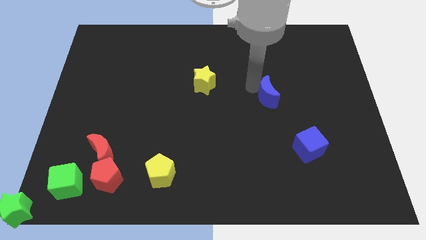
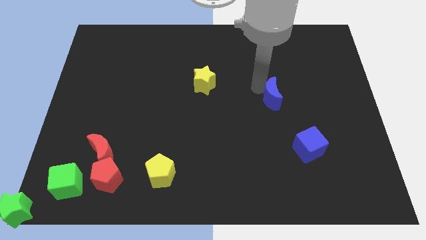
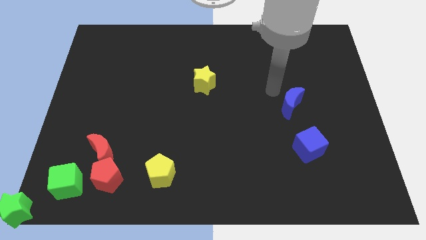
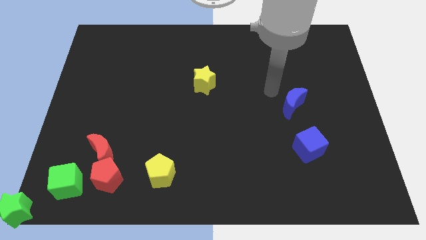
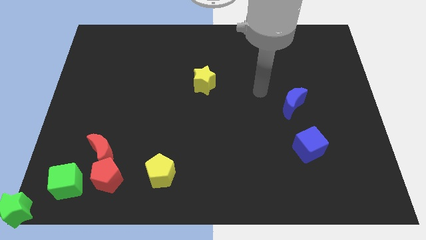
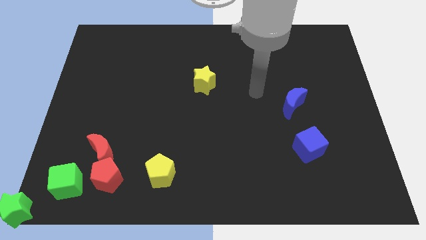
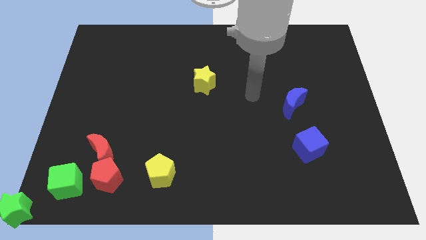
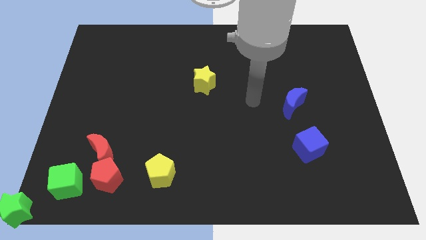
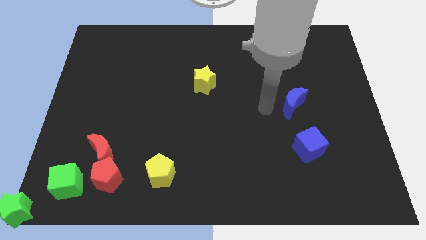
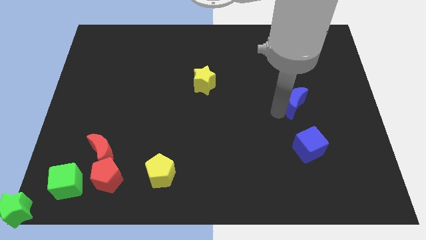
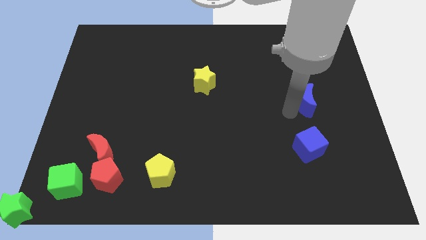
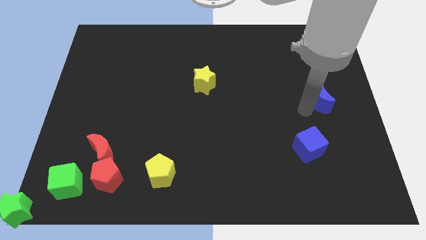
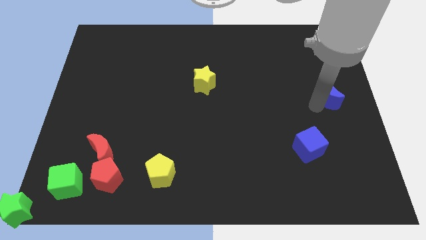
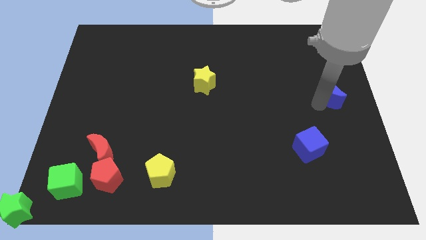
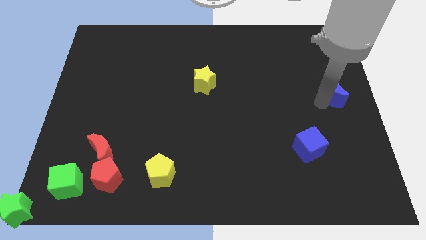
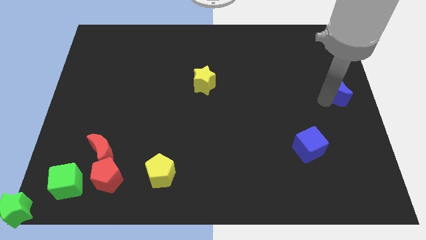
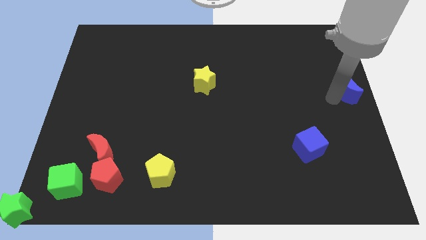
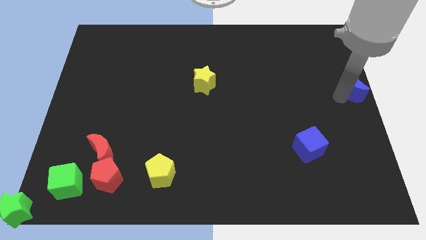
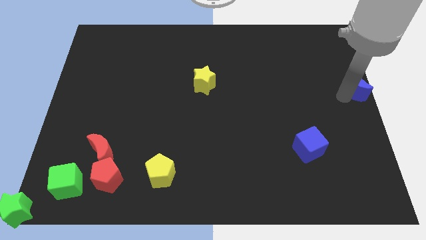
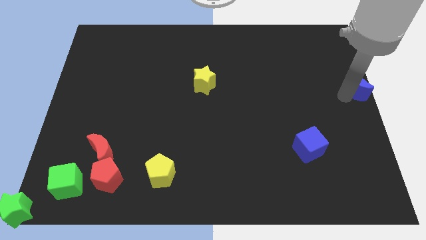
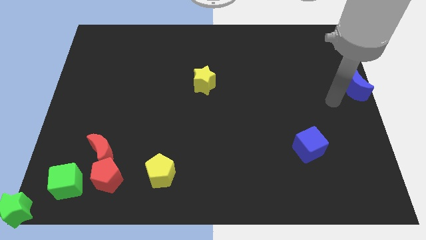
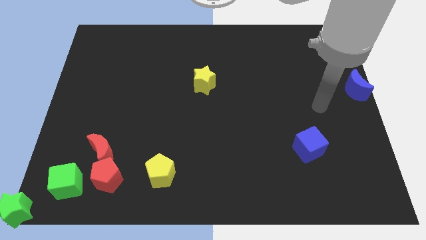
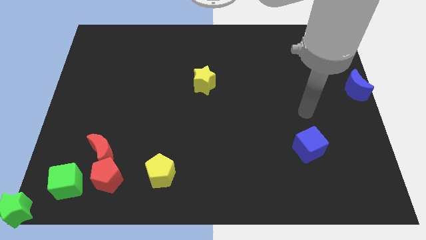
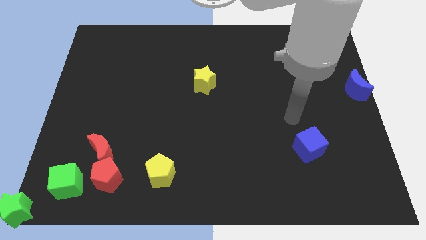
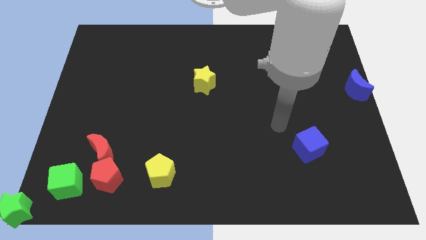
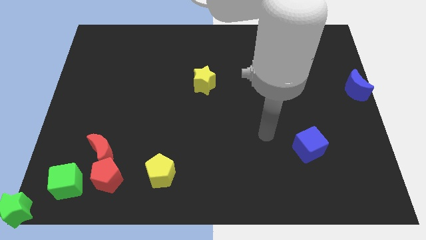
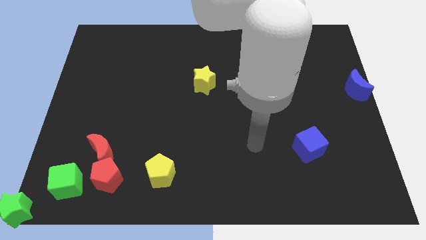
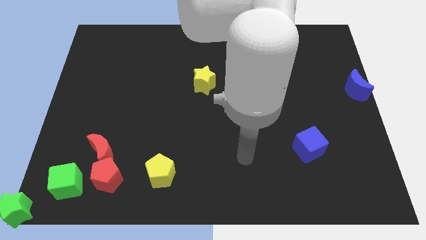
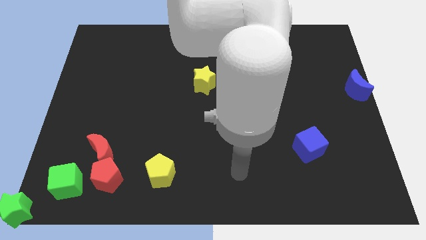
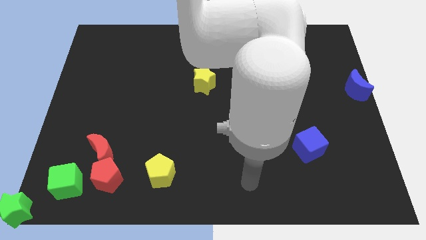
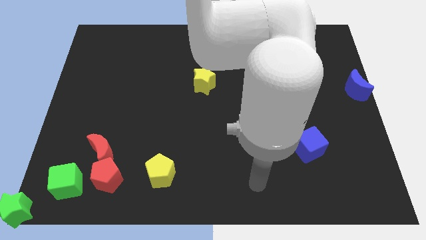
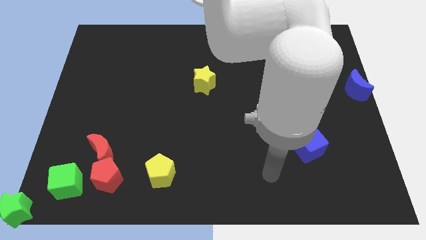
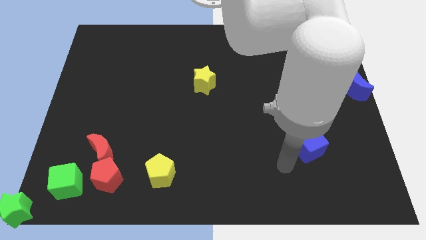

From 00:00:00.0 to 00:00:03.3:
move the blue moon to the middle right of the board

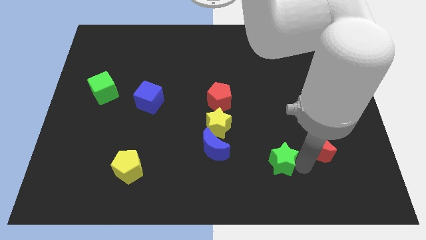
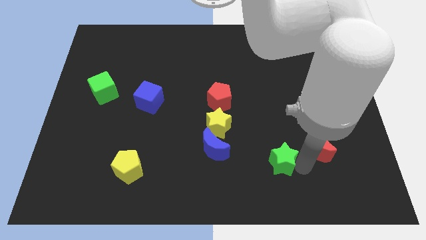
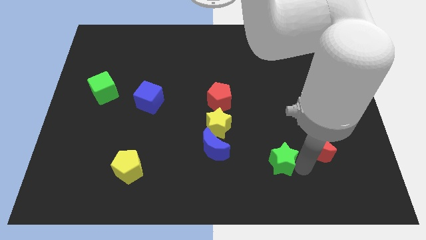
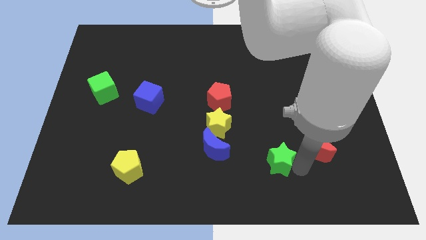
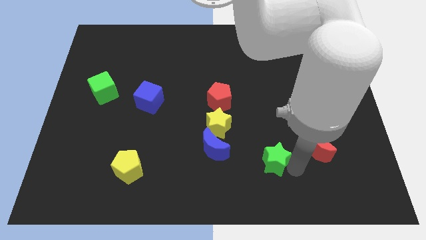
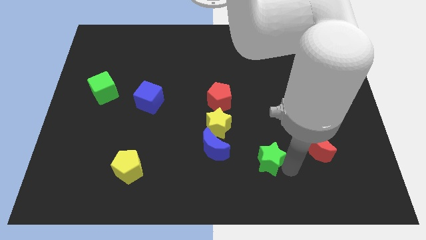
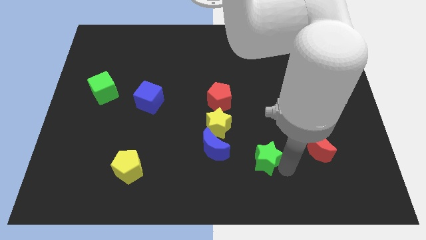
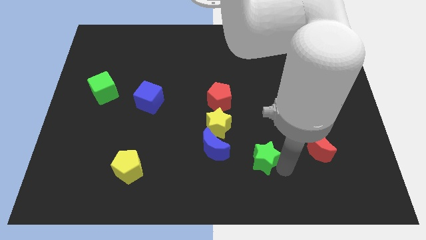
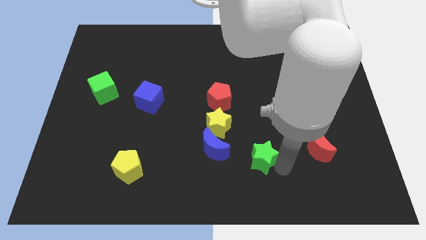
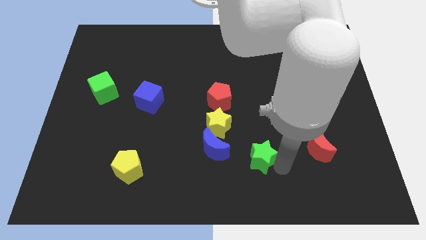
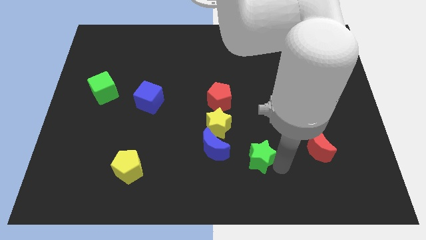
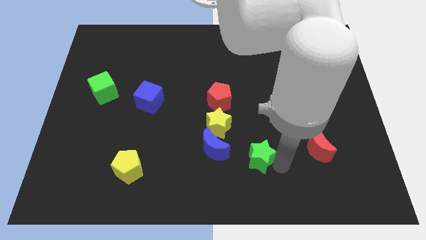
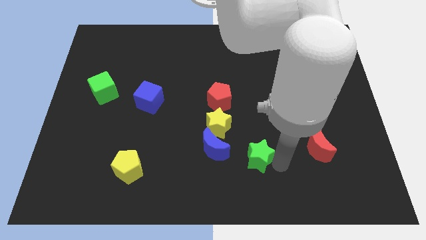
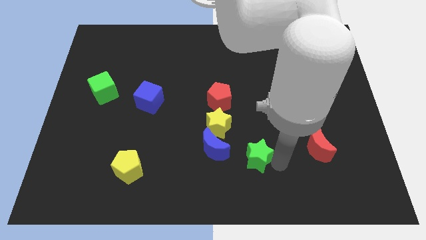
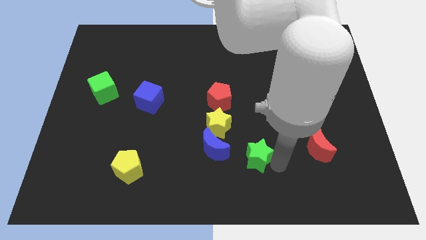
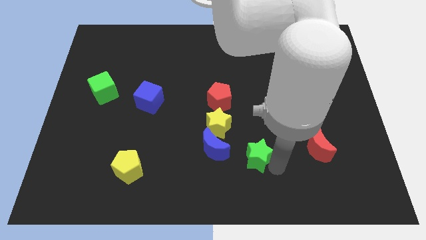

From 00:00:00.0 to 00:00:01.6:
place green star to the right of blue moon

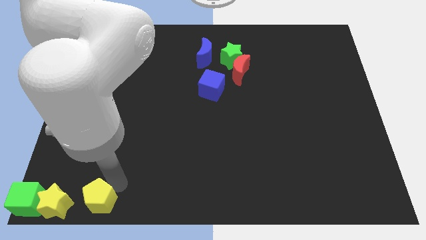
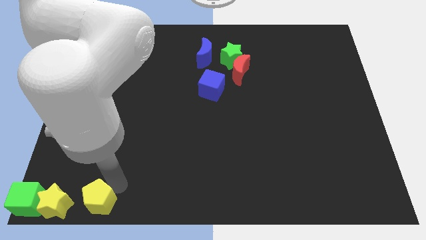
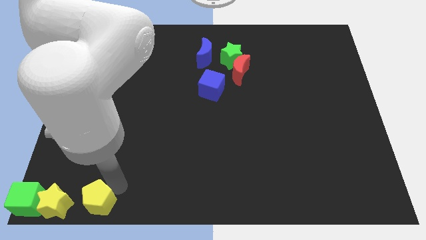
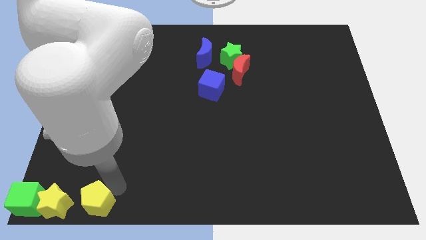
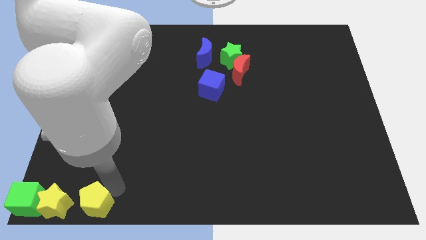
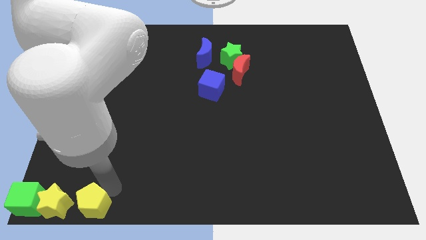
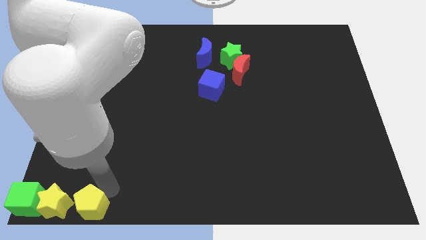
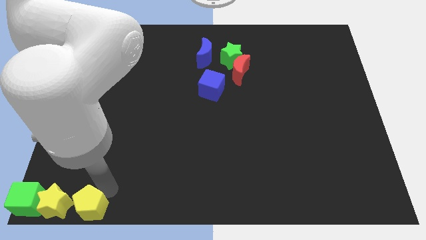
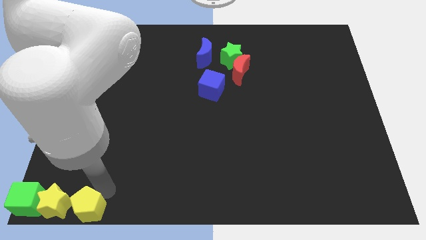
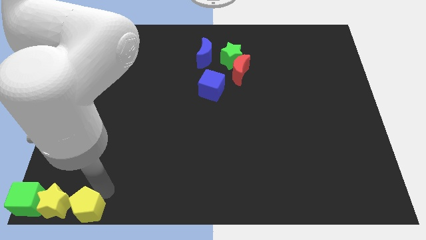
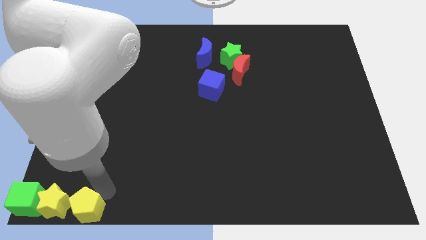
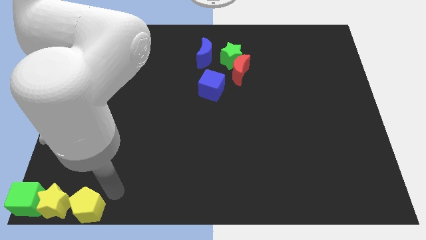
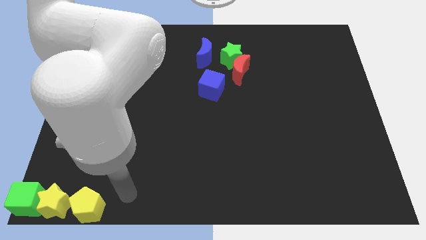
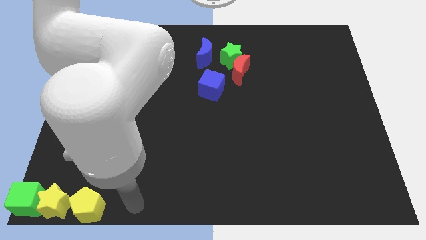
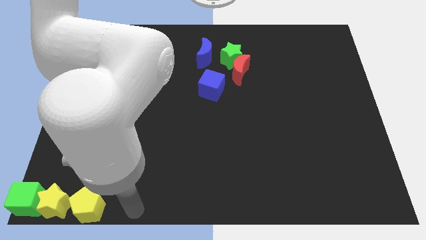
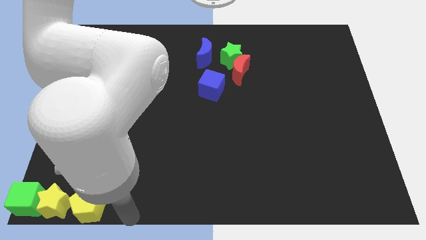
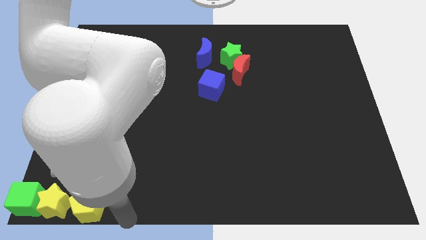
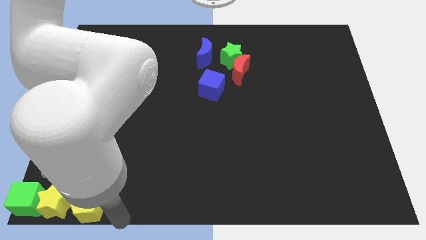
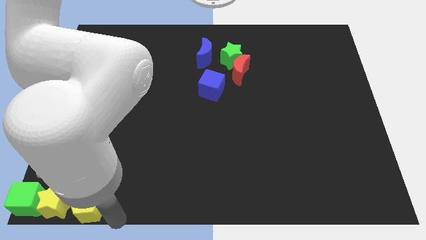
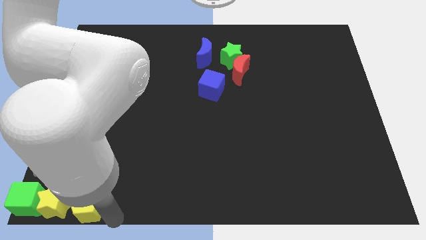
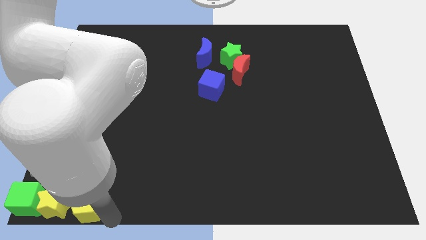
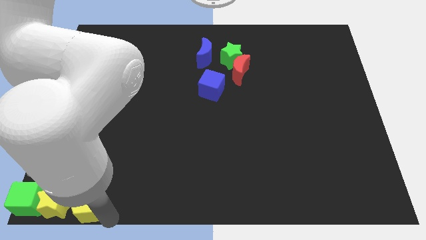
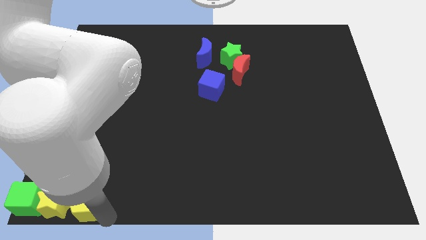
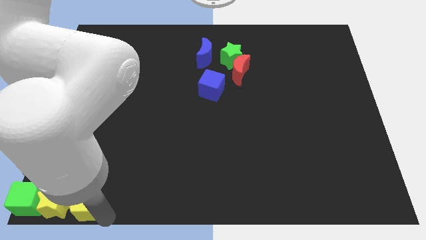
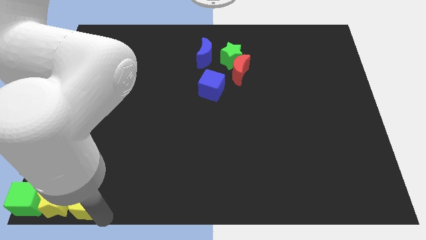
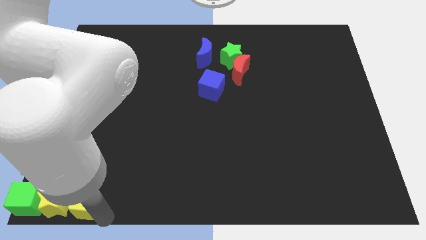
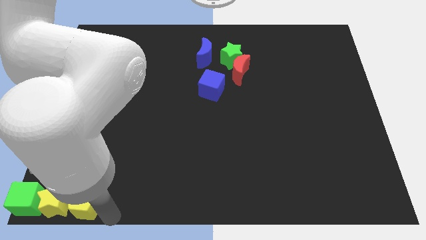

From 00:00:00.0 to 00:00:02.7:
move the yellow pentagon to the right of the yellow star

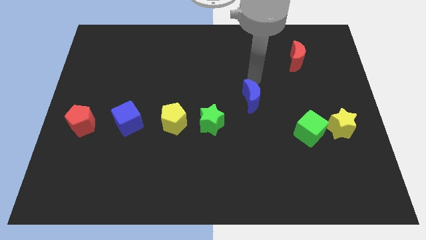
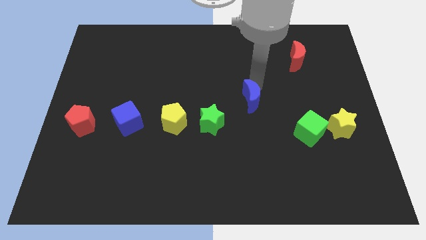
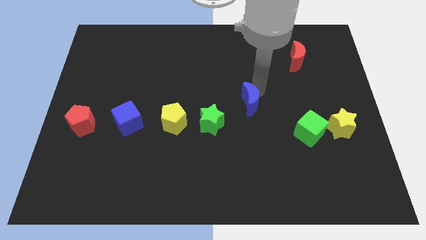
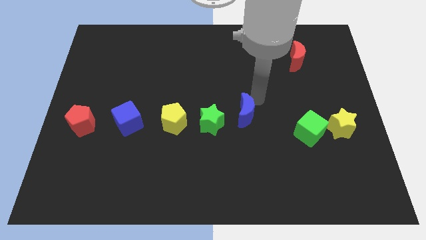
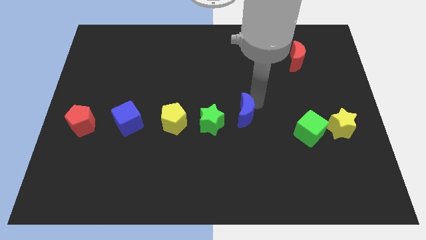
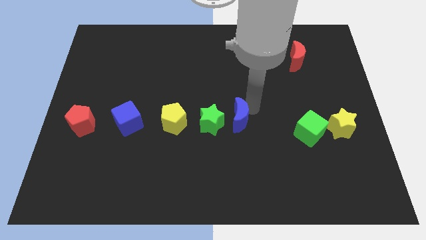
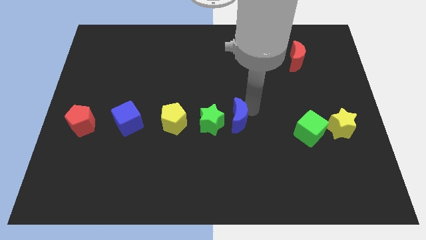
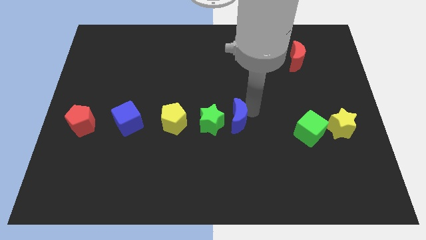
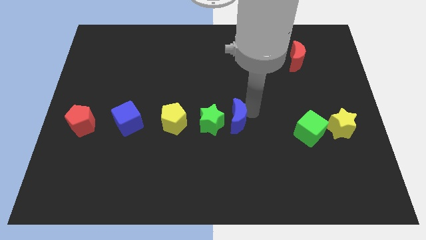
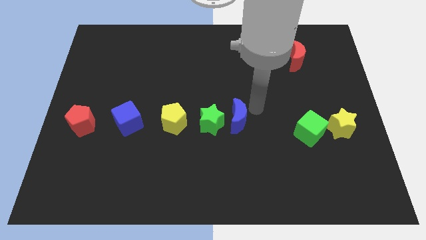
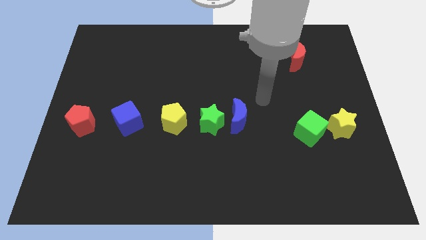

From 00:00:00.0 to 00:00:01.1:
move the blue crescent near to the right side of the green star

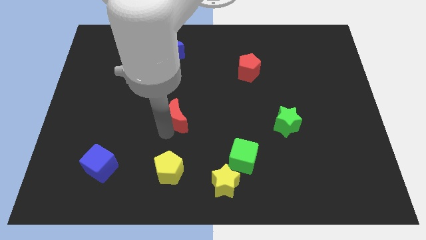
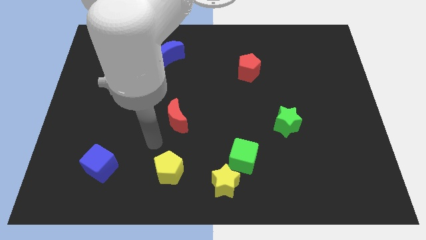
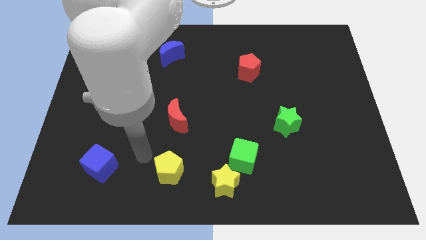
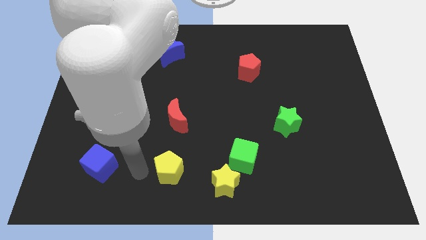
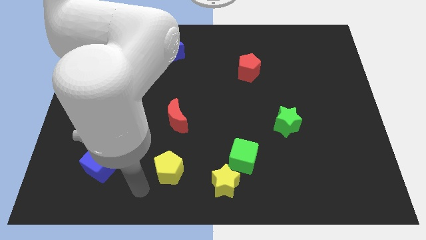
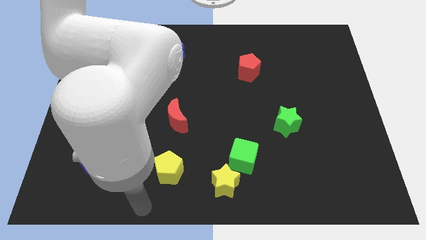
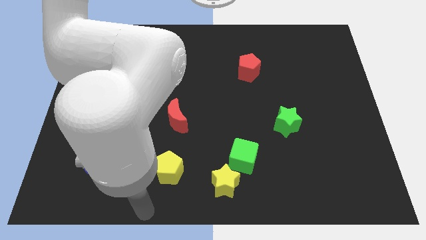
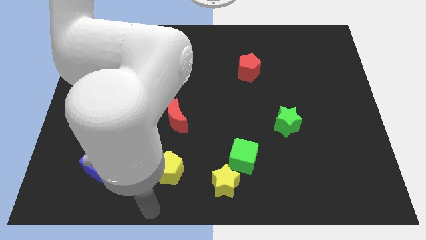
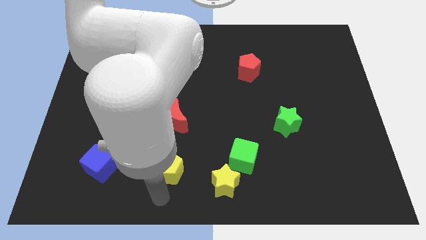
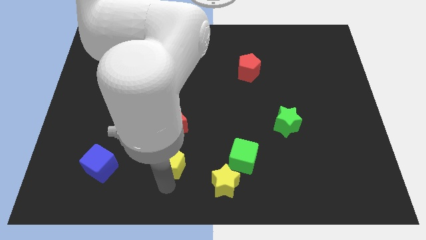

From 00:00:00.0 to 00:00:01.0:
move the arm towards the yellow pentagon
